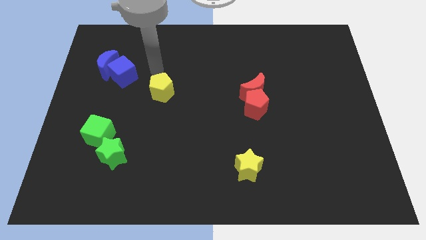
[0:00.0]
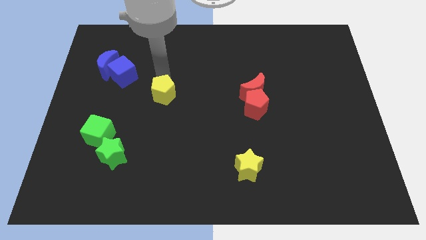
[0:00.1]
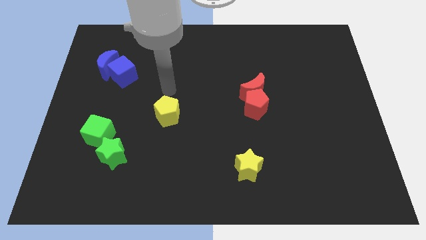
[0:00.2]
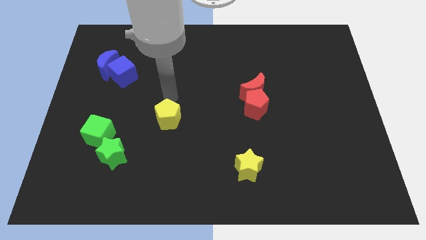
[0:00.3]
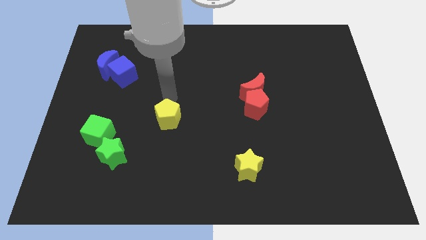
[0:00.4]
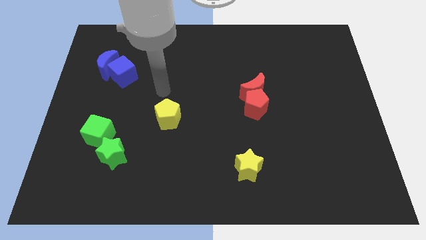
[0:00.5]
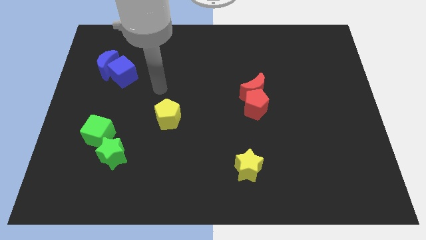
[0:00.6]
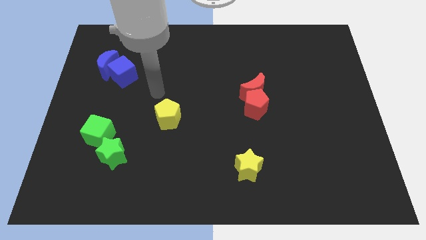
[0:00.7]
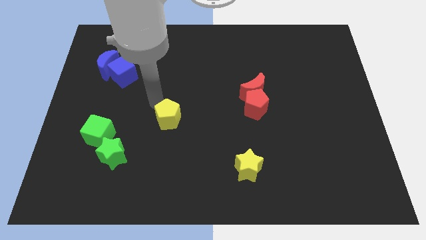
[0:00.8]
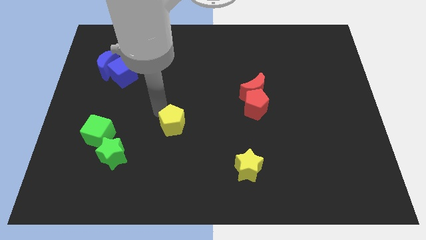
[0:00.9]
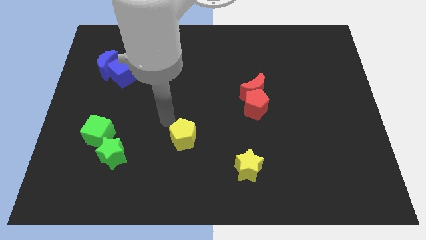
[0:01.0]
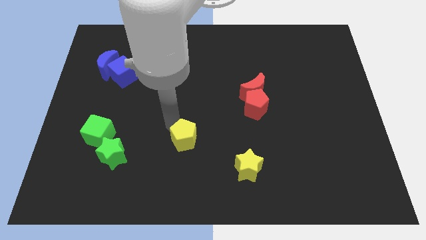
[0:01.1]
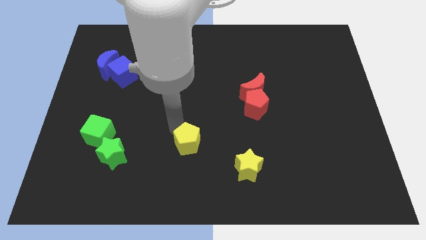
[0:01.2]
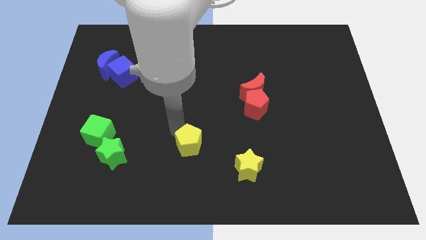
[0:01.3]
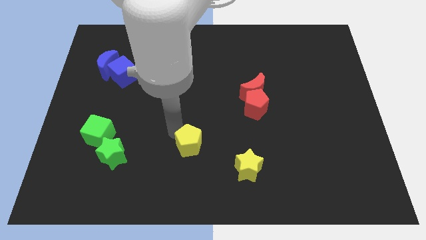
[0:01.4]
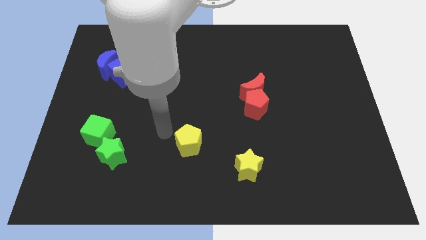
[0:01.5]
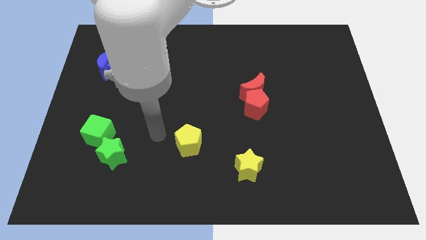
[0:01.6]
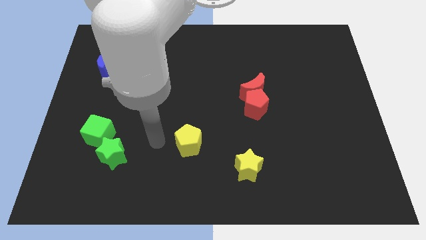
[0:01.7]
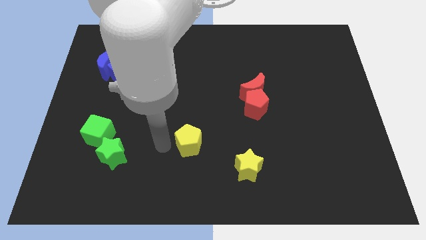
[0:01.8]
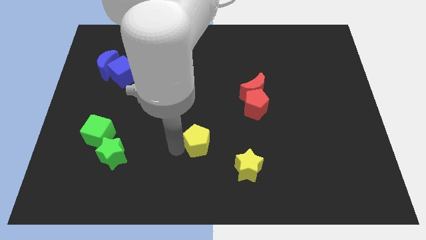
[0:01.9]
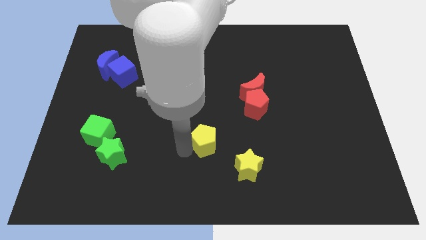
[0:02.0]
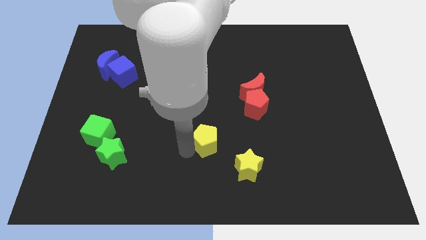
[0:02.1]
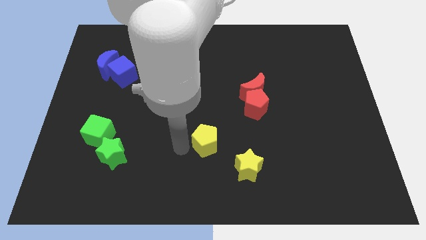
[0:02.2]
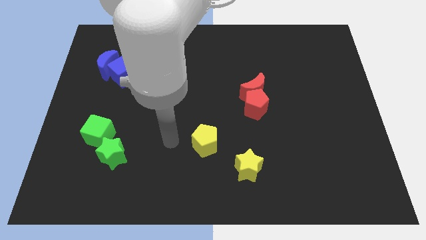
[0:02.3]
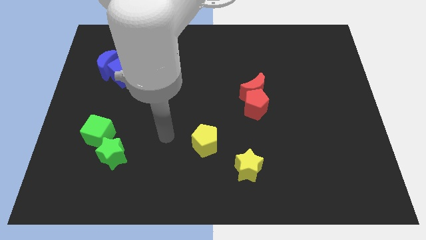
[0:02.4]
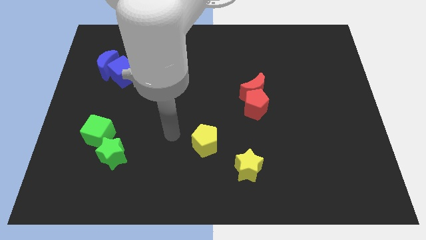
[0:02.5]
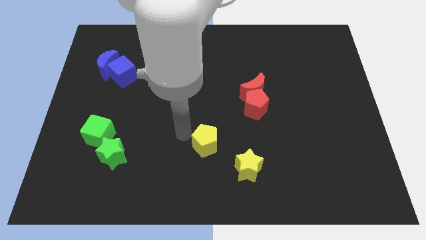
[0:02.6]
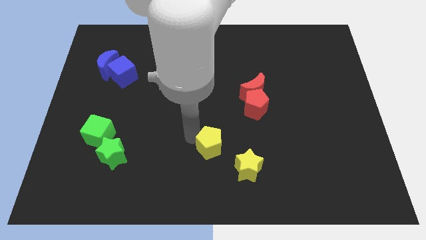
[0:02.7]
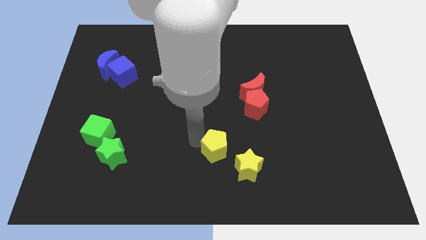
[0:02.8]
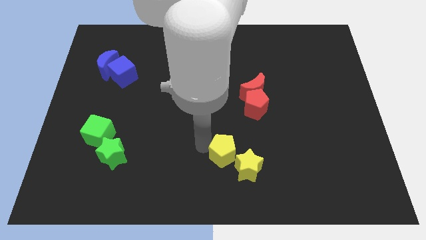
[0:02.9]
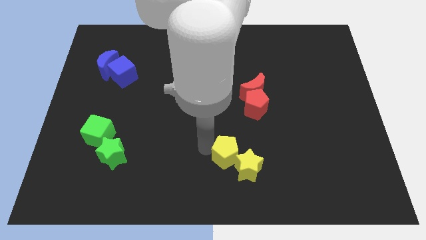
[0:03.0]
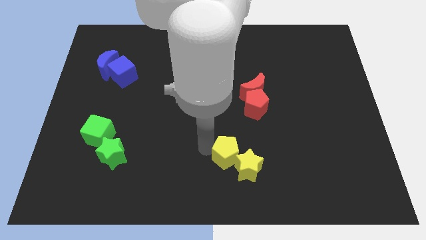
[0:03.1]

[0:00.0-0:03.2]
move the yellow pentagon to the top left to the yellow star

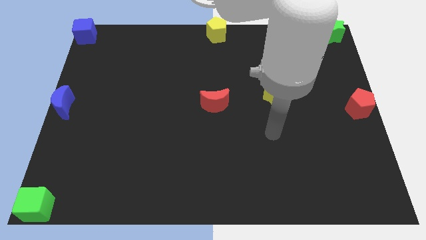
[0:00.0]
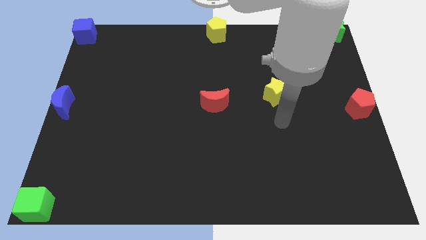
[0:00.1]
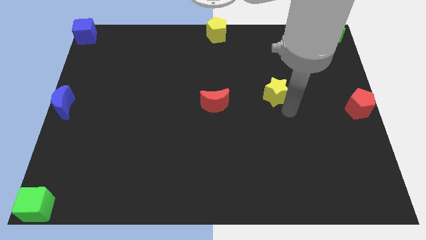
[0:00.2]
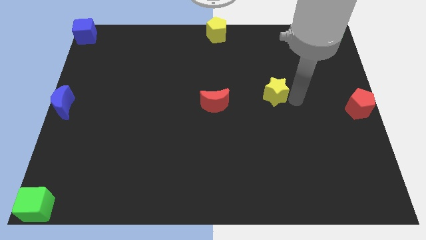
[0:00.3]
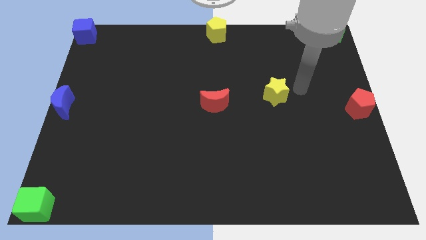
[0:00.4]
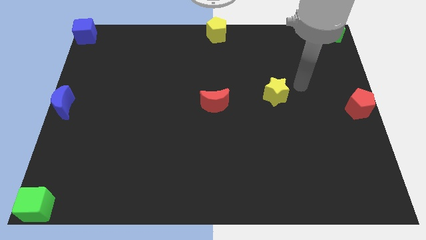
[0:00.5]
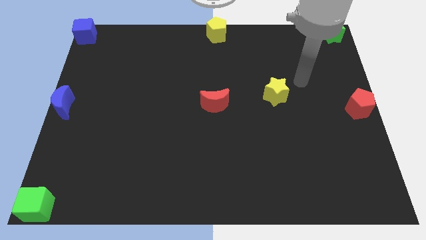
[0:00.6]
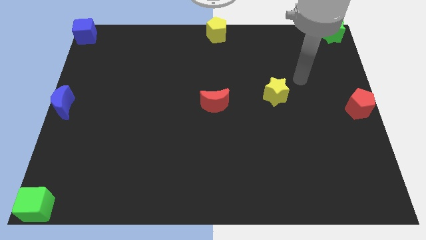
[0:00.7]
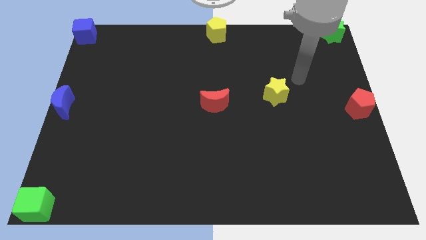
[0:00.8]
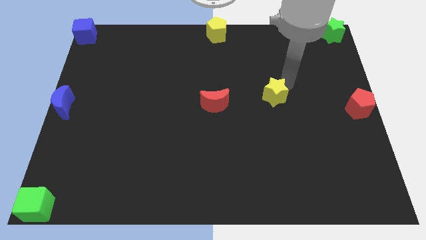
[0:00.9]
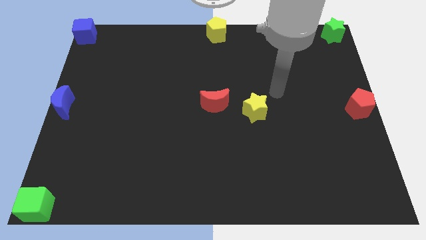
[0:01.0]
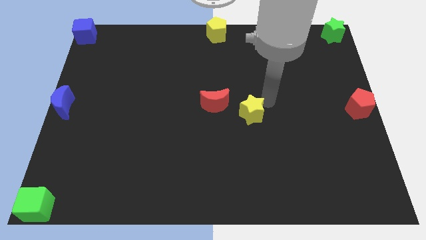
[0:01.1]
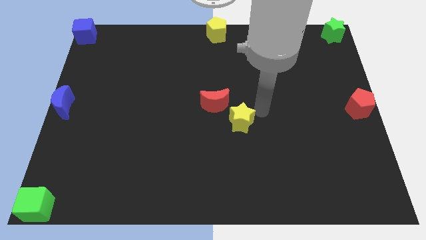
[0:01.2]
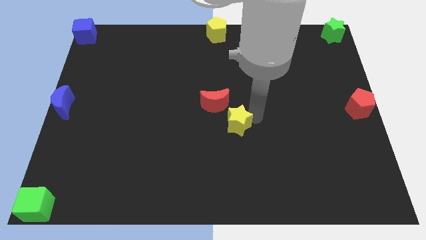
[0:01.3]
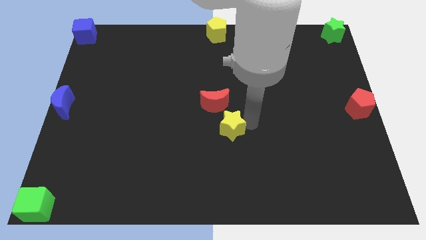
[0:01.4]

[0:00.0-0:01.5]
move the yellow star bottom right to the red crescent

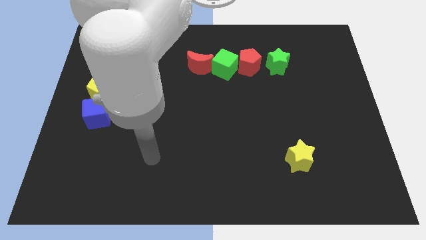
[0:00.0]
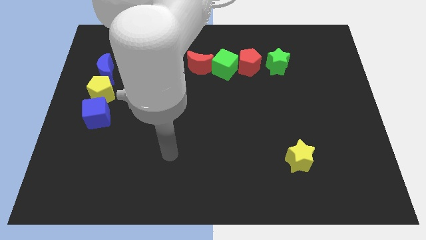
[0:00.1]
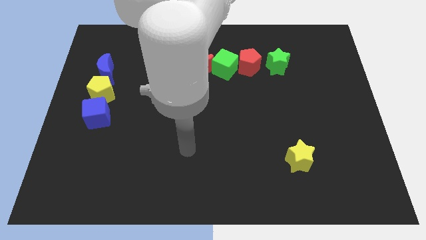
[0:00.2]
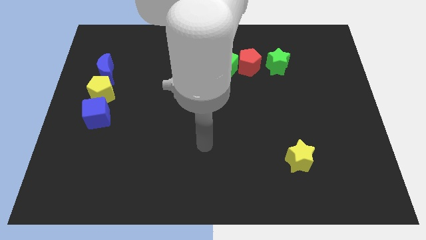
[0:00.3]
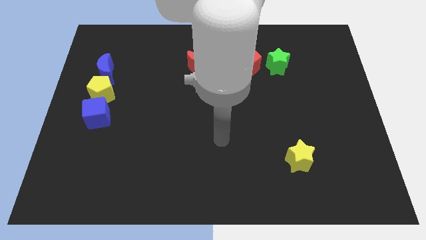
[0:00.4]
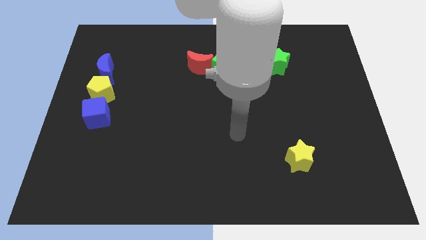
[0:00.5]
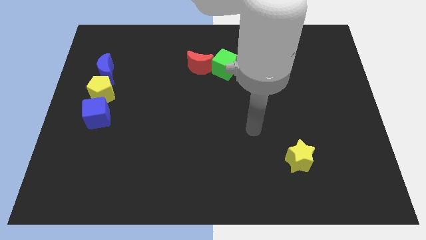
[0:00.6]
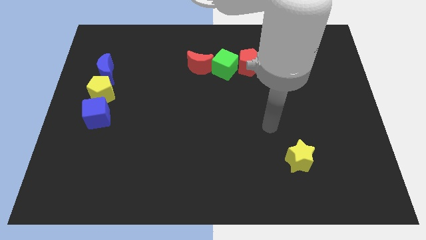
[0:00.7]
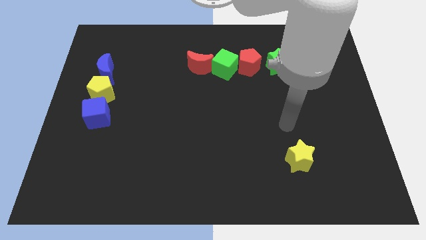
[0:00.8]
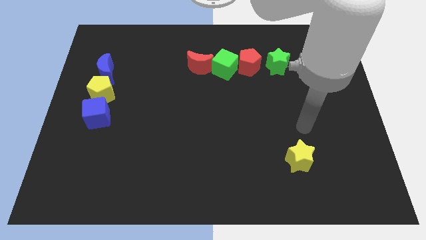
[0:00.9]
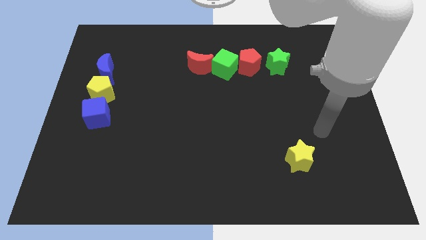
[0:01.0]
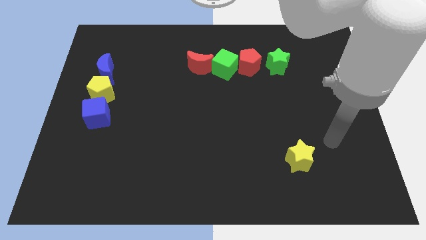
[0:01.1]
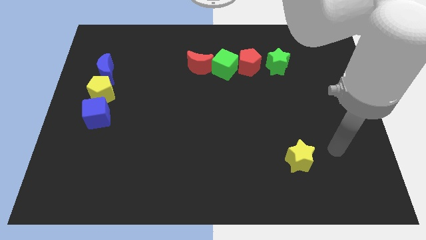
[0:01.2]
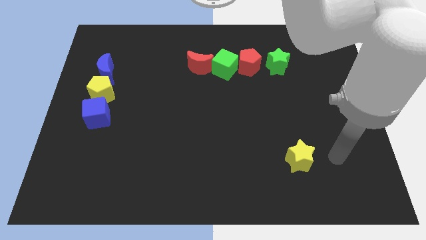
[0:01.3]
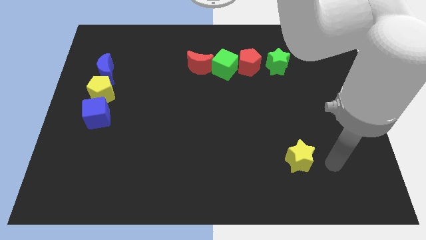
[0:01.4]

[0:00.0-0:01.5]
move your hand to the right of the yellow star

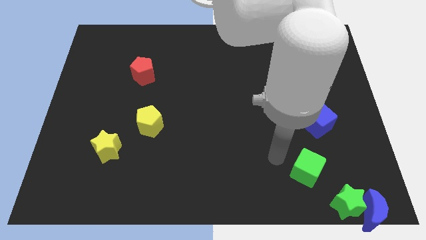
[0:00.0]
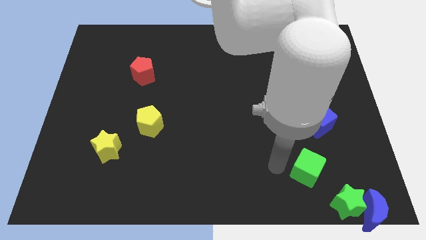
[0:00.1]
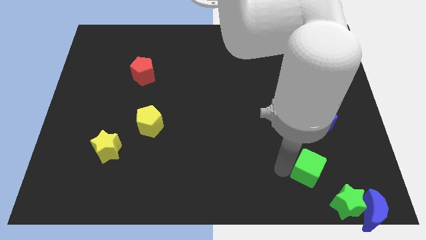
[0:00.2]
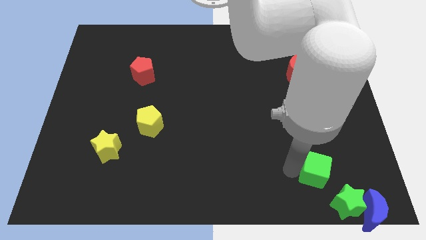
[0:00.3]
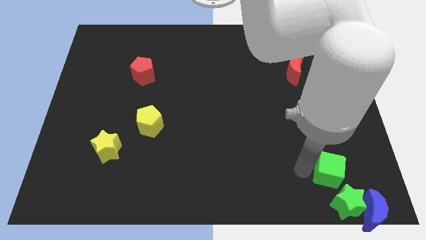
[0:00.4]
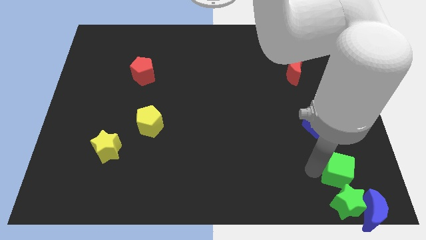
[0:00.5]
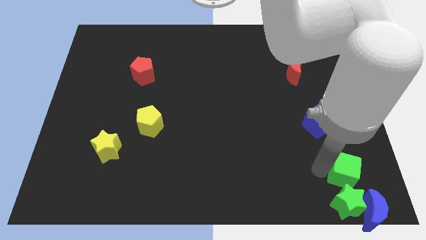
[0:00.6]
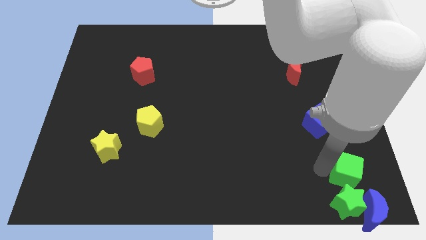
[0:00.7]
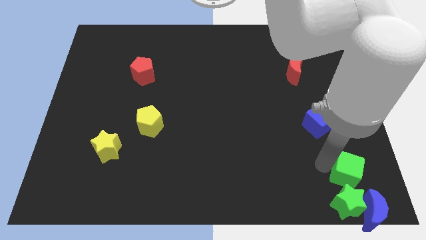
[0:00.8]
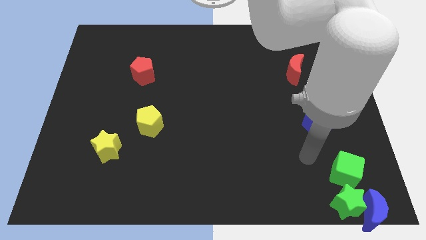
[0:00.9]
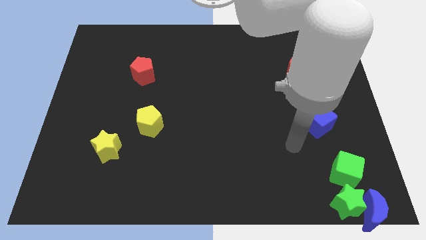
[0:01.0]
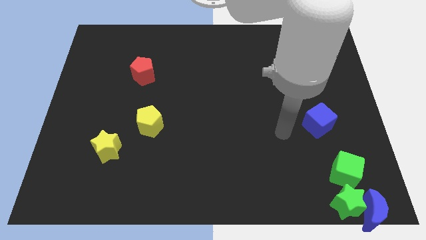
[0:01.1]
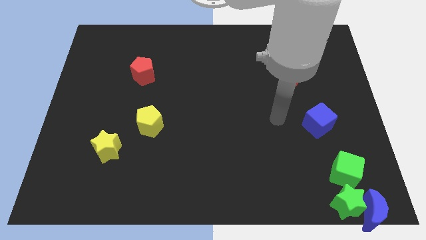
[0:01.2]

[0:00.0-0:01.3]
move the green cube above the green star

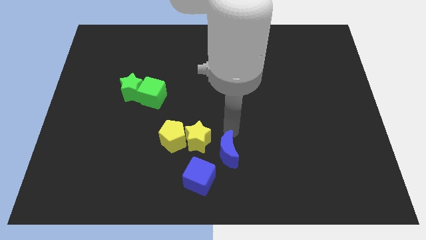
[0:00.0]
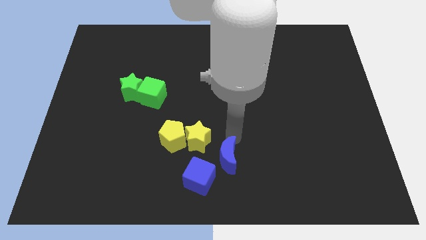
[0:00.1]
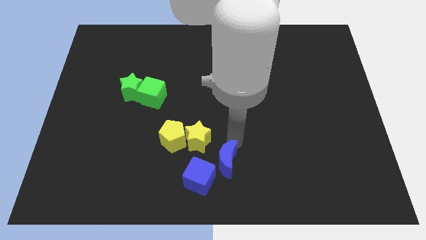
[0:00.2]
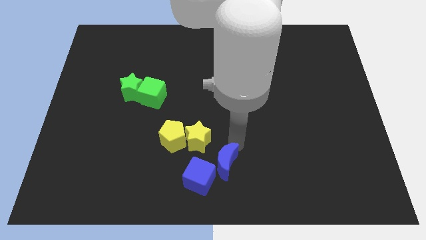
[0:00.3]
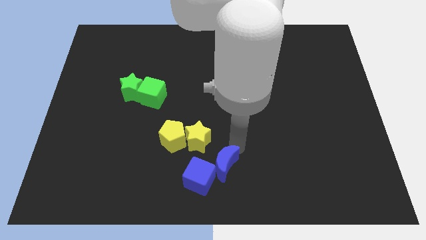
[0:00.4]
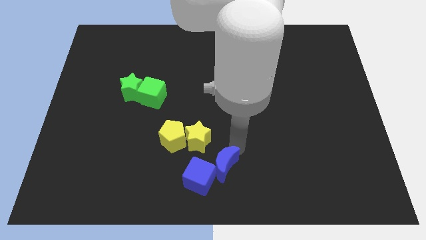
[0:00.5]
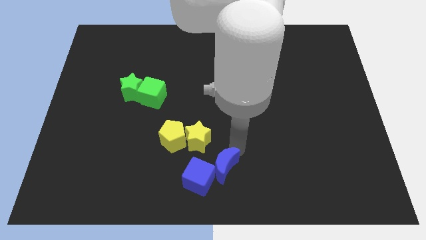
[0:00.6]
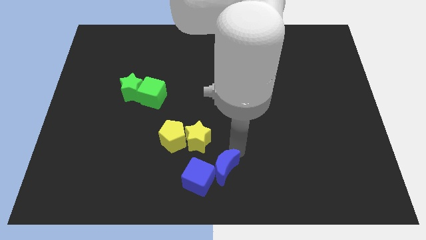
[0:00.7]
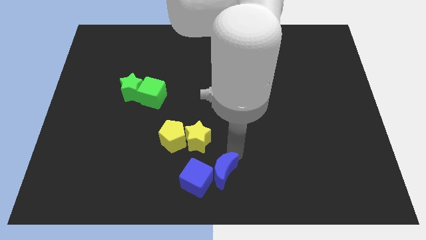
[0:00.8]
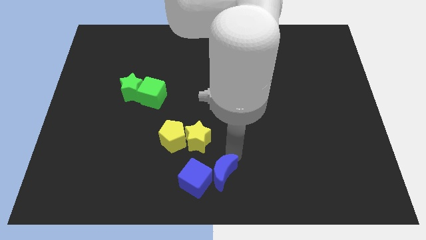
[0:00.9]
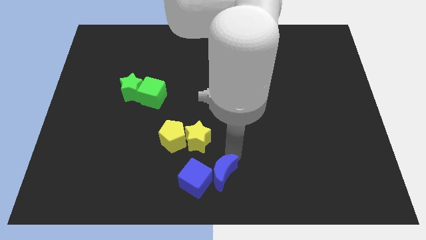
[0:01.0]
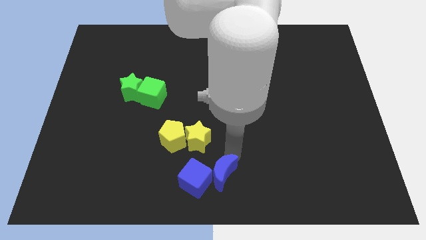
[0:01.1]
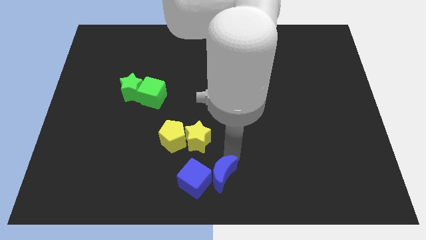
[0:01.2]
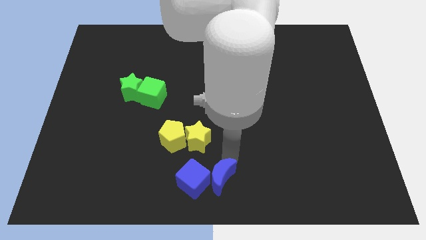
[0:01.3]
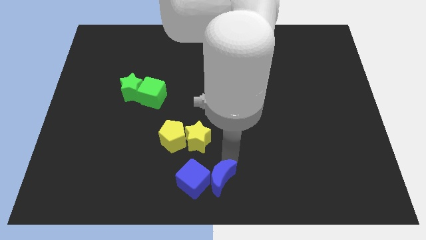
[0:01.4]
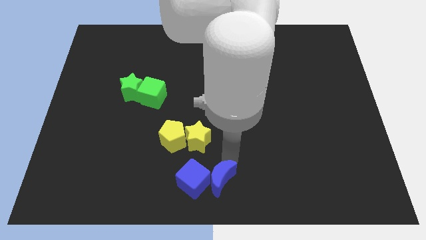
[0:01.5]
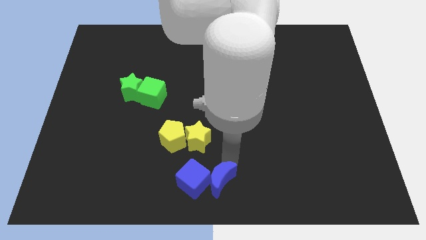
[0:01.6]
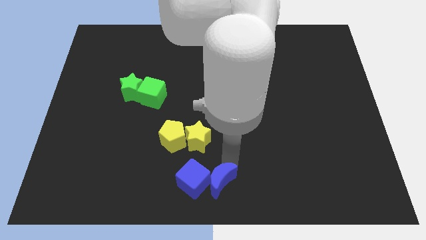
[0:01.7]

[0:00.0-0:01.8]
move the blue crescent into the right side of the blue cube
